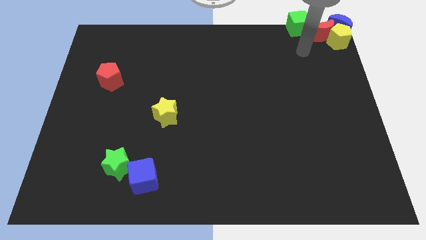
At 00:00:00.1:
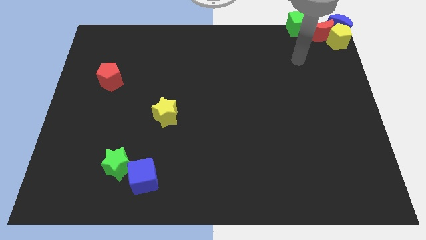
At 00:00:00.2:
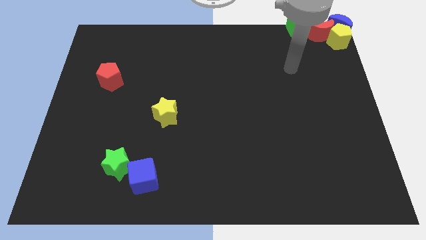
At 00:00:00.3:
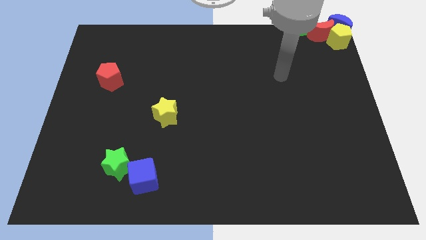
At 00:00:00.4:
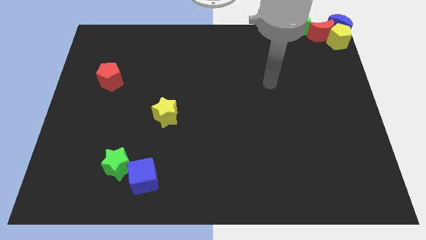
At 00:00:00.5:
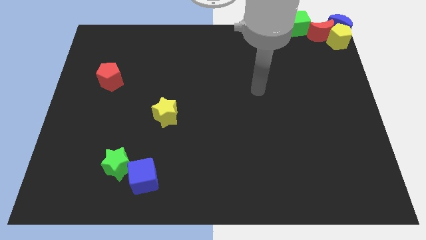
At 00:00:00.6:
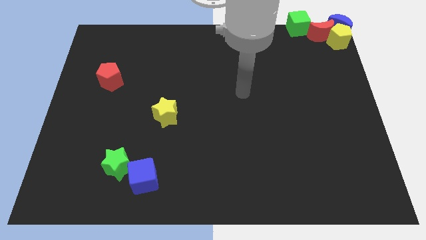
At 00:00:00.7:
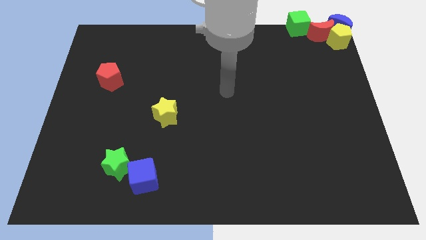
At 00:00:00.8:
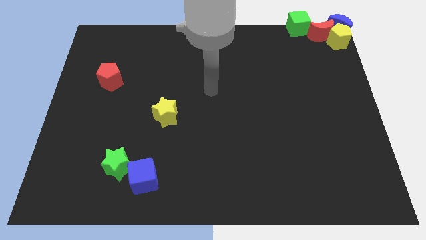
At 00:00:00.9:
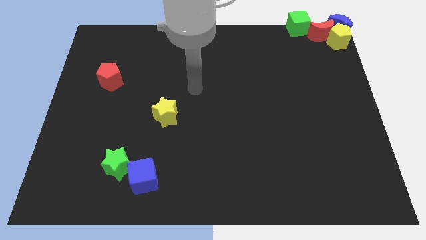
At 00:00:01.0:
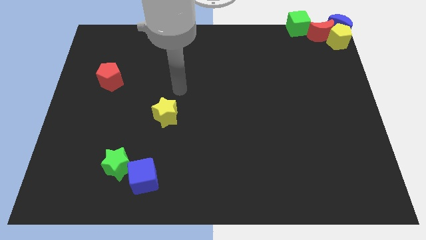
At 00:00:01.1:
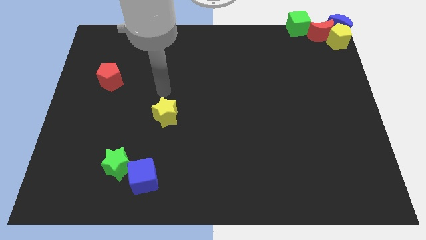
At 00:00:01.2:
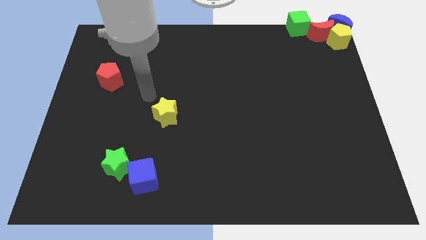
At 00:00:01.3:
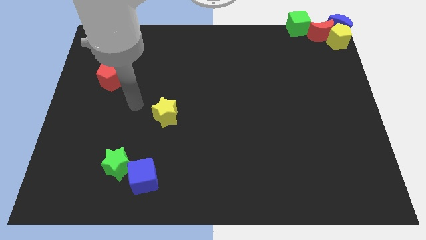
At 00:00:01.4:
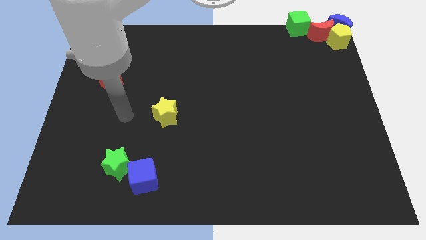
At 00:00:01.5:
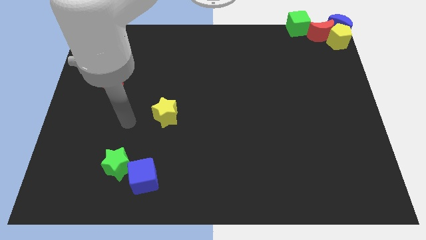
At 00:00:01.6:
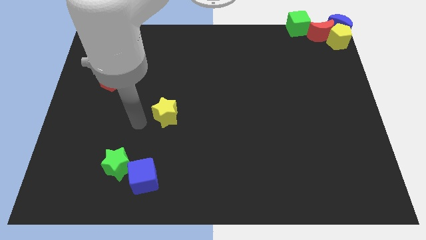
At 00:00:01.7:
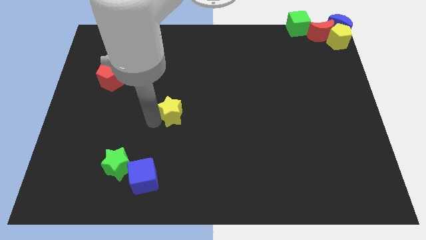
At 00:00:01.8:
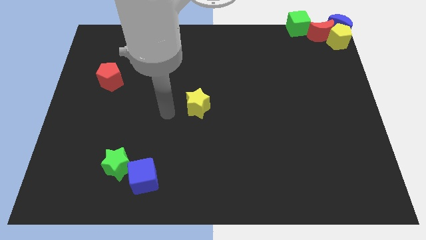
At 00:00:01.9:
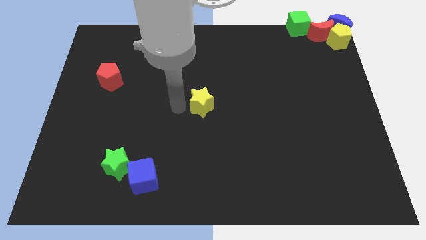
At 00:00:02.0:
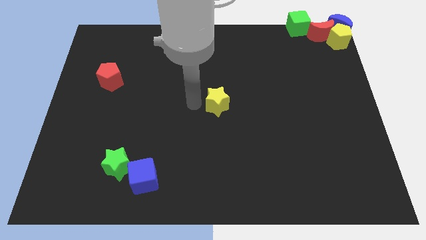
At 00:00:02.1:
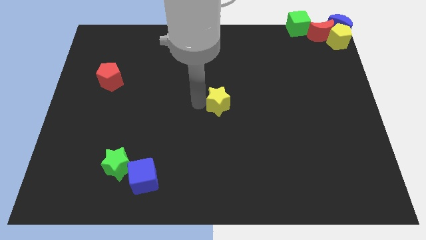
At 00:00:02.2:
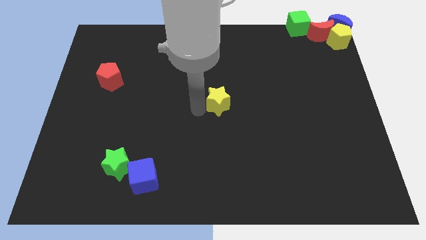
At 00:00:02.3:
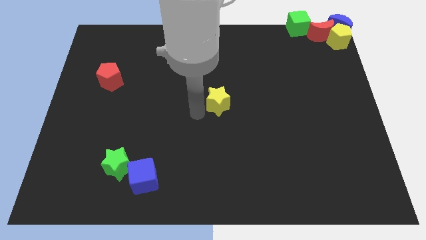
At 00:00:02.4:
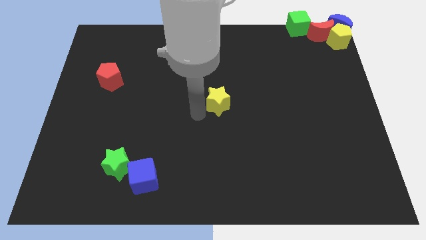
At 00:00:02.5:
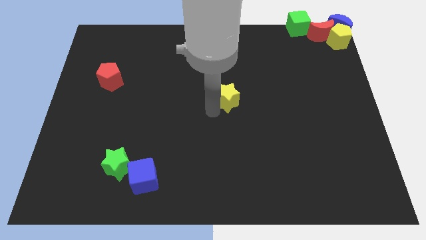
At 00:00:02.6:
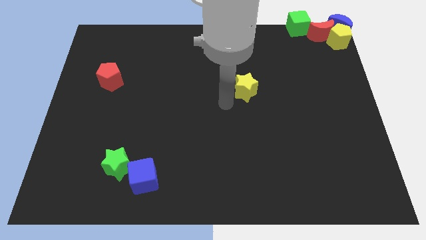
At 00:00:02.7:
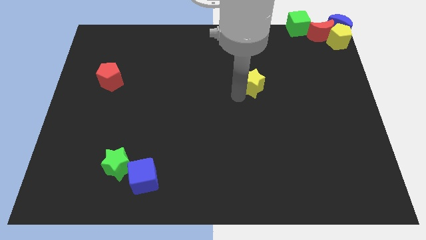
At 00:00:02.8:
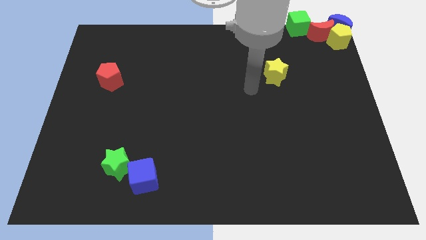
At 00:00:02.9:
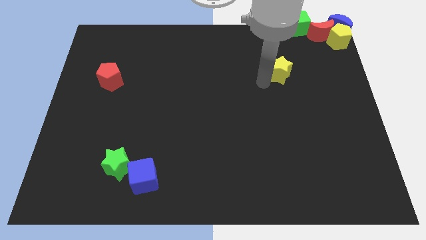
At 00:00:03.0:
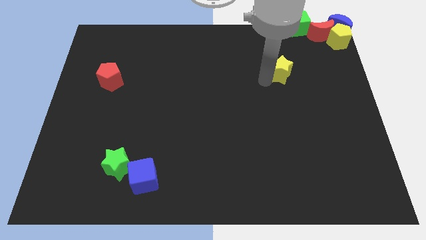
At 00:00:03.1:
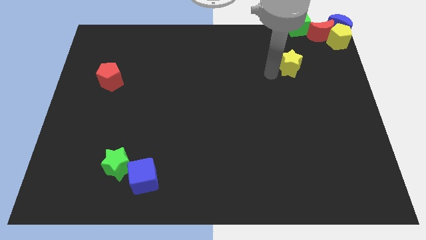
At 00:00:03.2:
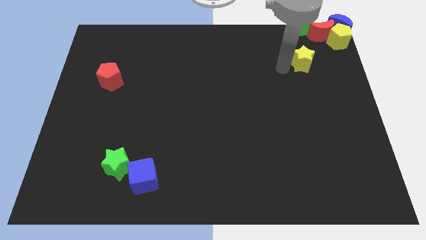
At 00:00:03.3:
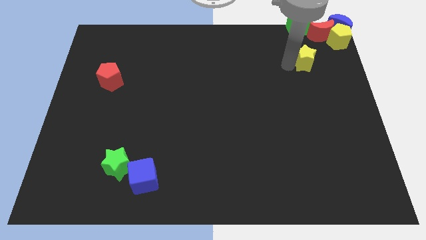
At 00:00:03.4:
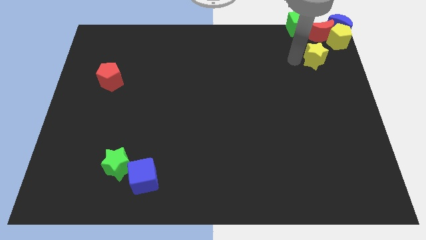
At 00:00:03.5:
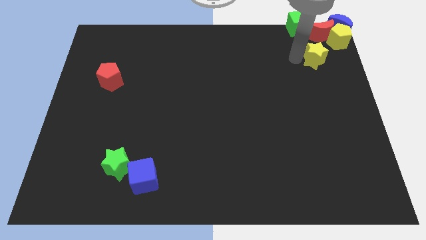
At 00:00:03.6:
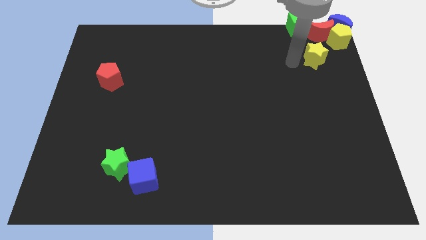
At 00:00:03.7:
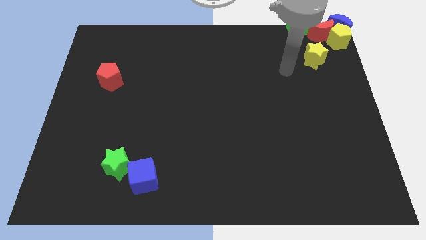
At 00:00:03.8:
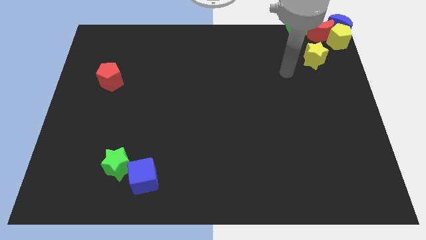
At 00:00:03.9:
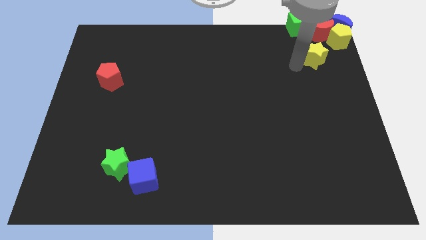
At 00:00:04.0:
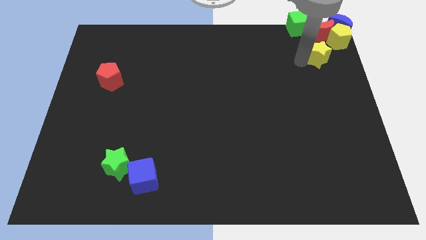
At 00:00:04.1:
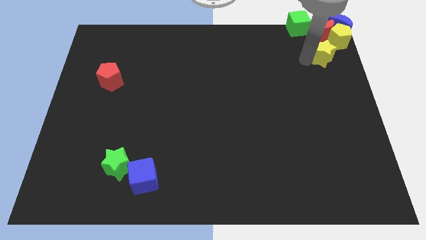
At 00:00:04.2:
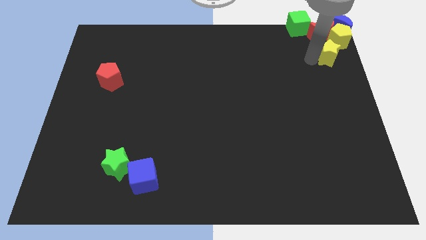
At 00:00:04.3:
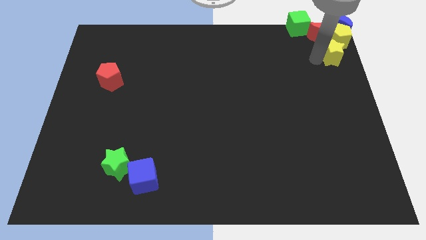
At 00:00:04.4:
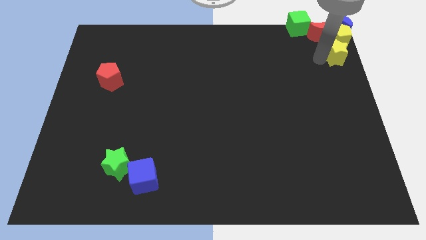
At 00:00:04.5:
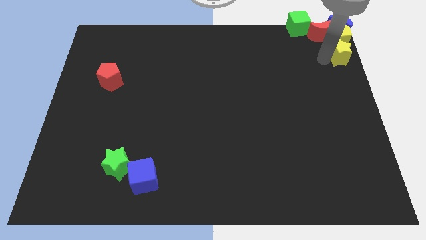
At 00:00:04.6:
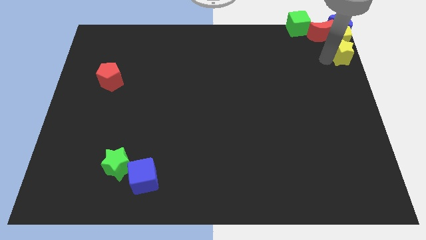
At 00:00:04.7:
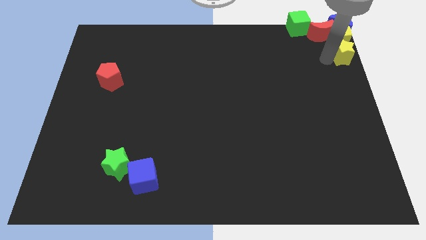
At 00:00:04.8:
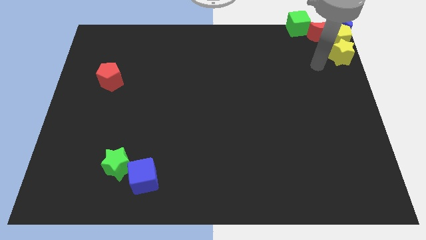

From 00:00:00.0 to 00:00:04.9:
move the yellow star to the bottom of the yellow pentagon

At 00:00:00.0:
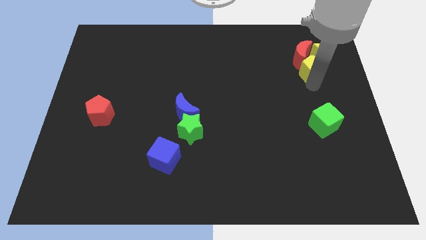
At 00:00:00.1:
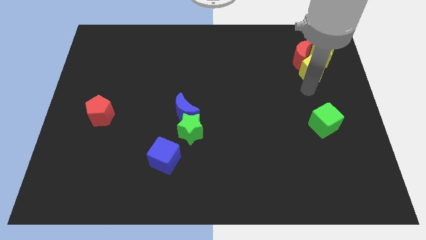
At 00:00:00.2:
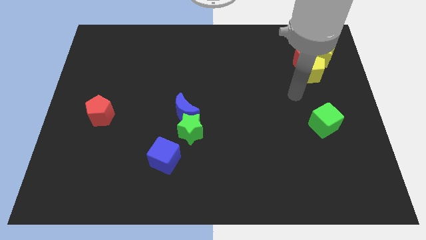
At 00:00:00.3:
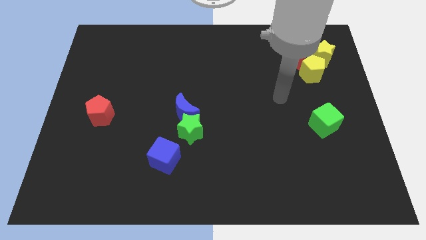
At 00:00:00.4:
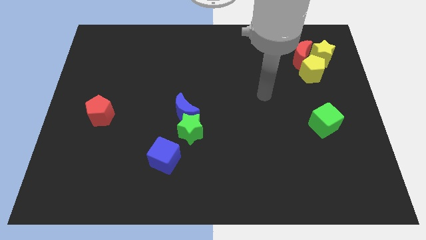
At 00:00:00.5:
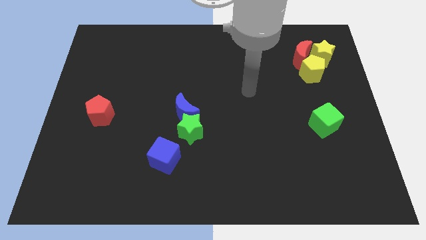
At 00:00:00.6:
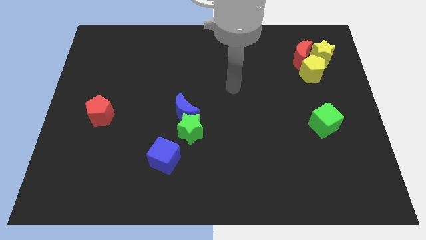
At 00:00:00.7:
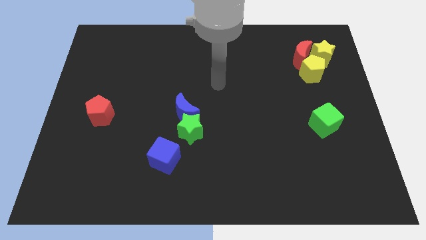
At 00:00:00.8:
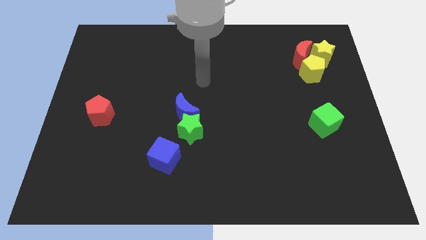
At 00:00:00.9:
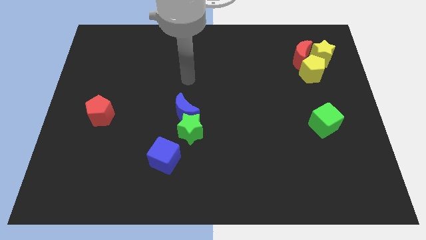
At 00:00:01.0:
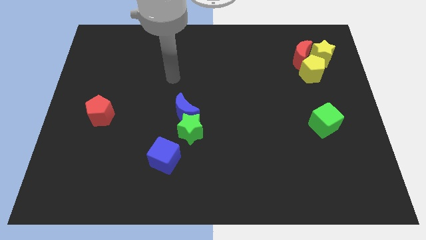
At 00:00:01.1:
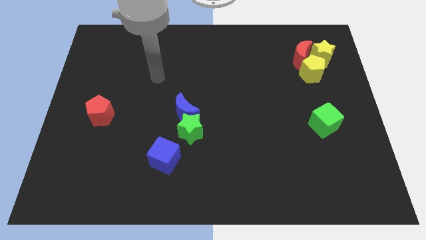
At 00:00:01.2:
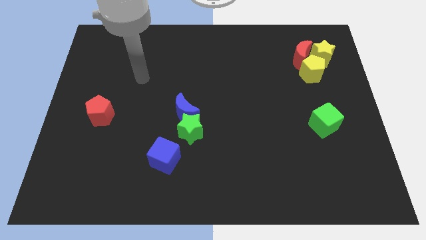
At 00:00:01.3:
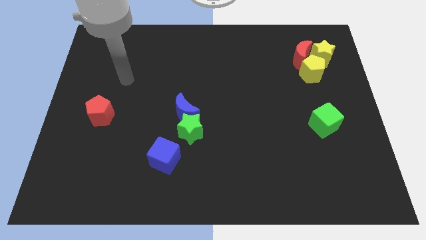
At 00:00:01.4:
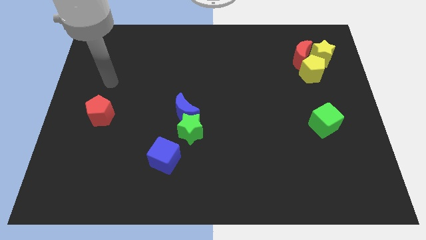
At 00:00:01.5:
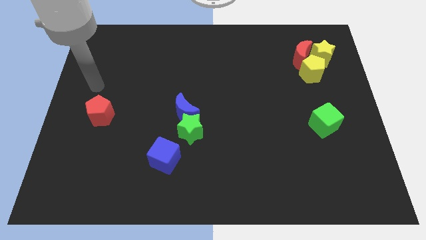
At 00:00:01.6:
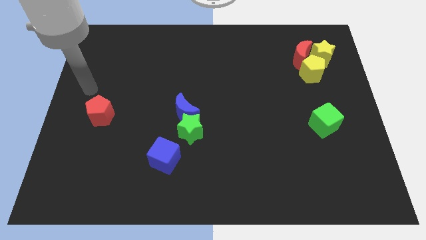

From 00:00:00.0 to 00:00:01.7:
place the arm above the red pentagon

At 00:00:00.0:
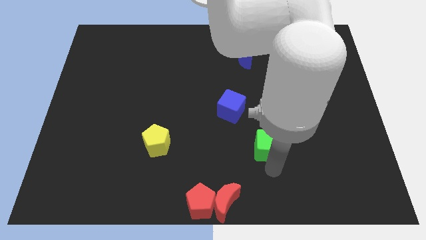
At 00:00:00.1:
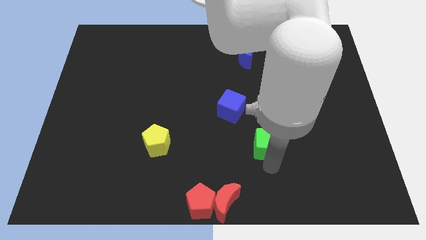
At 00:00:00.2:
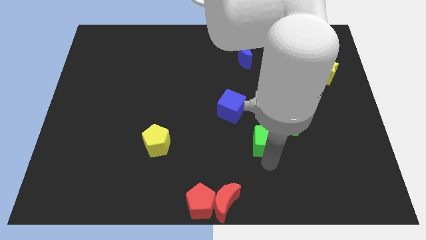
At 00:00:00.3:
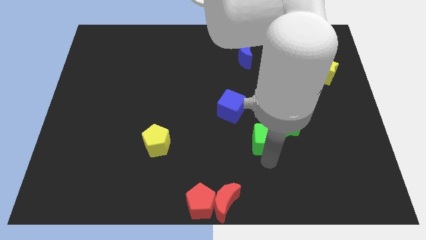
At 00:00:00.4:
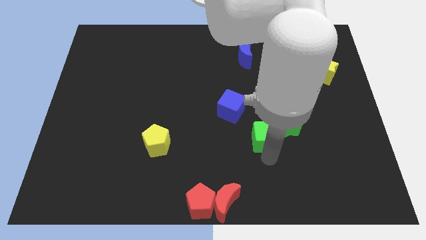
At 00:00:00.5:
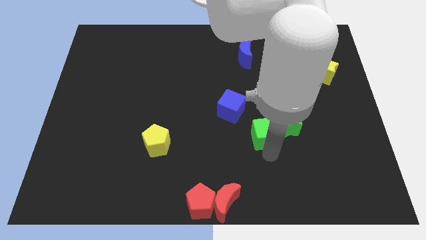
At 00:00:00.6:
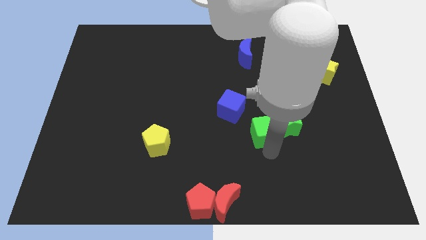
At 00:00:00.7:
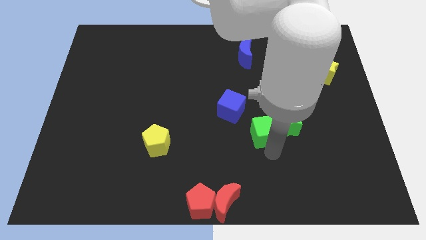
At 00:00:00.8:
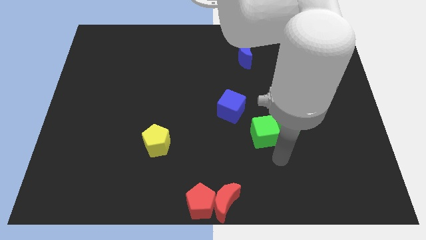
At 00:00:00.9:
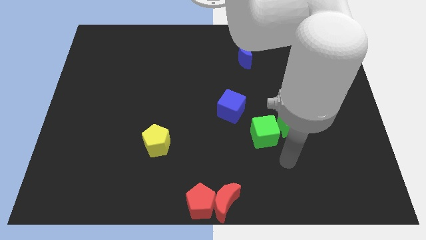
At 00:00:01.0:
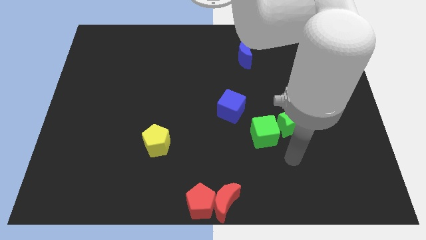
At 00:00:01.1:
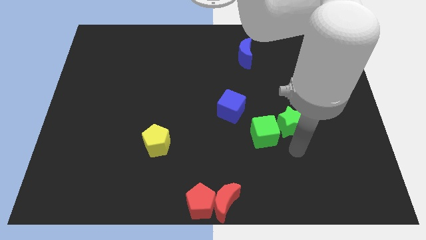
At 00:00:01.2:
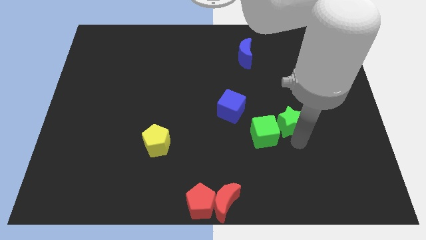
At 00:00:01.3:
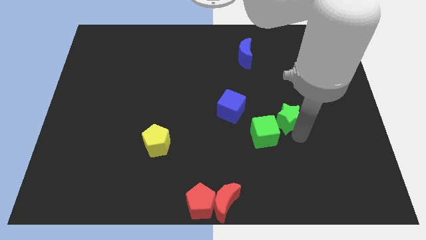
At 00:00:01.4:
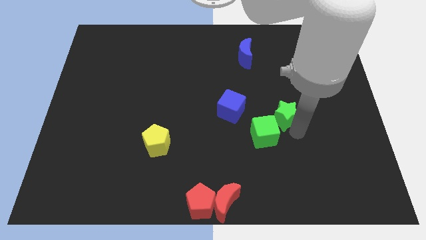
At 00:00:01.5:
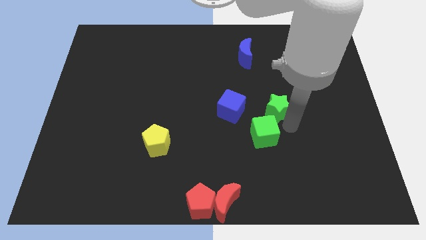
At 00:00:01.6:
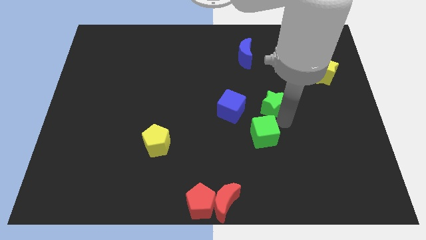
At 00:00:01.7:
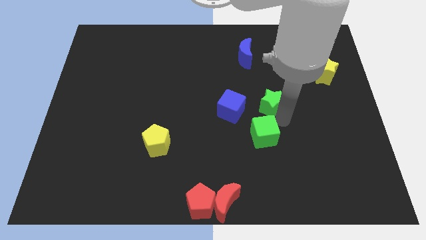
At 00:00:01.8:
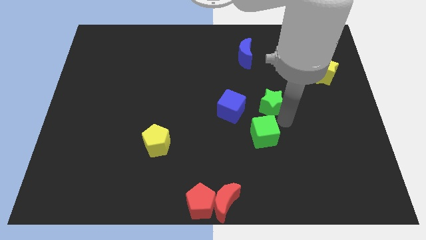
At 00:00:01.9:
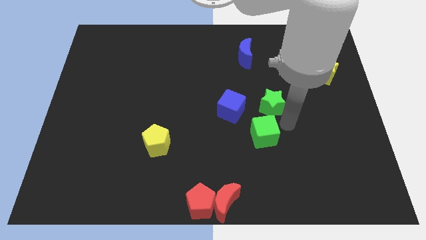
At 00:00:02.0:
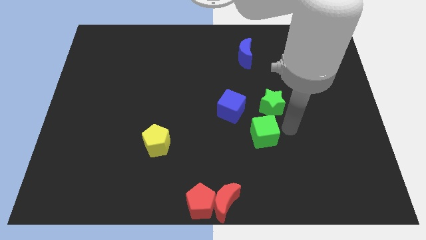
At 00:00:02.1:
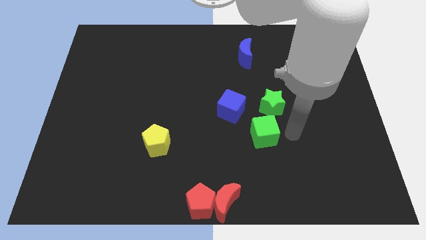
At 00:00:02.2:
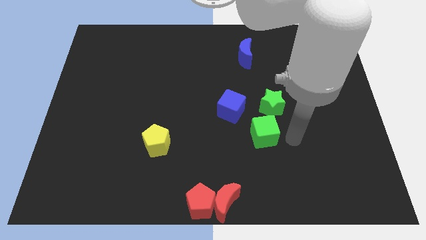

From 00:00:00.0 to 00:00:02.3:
push the green star above the green cube

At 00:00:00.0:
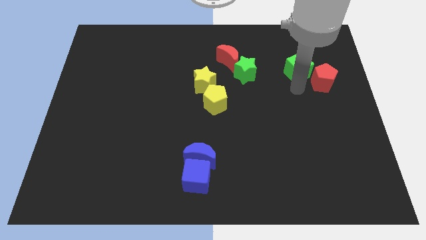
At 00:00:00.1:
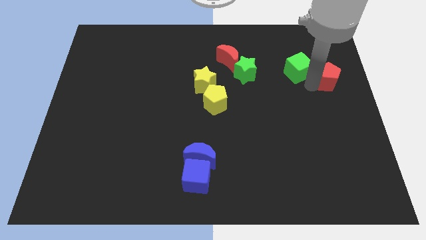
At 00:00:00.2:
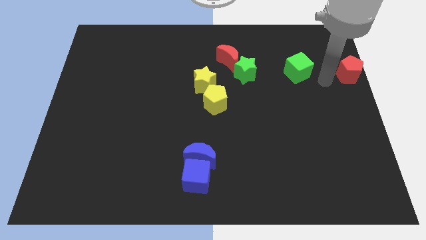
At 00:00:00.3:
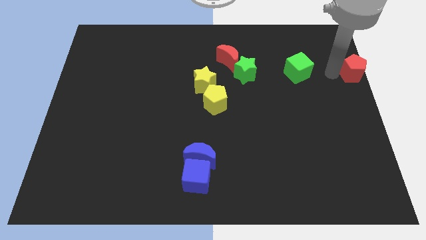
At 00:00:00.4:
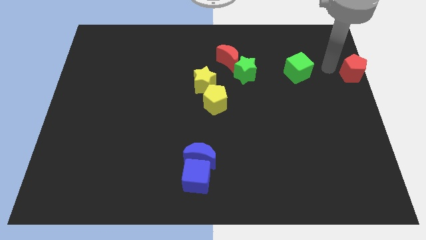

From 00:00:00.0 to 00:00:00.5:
move the red pentagon towards right
